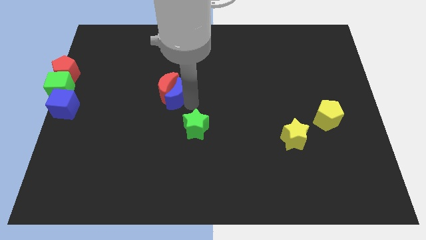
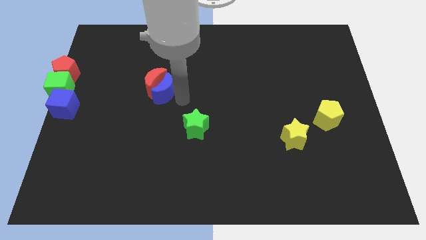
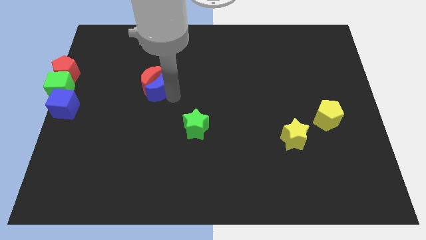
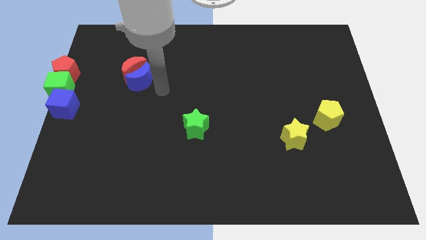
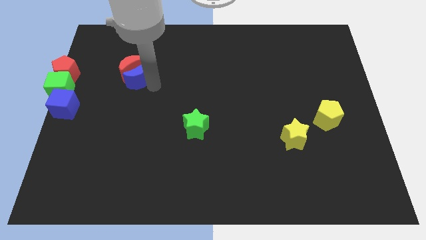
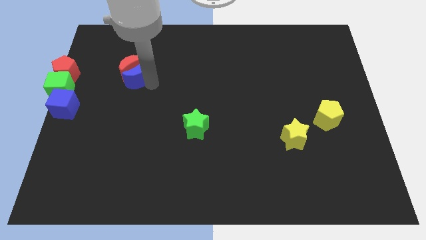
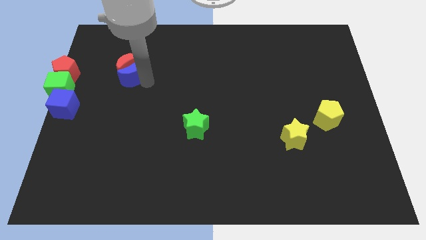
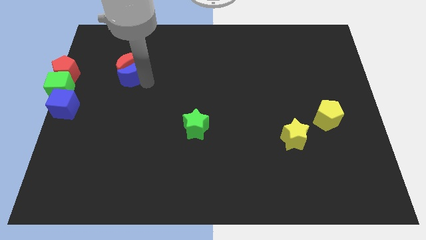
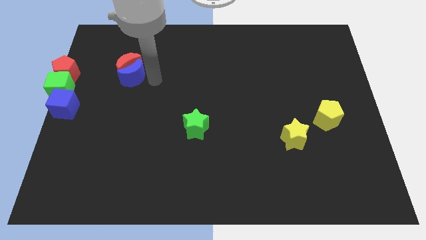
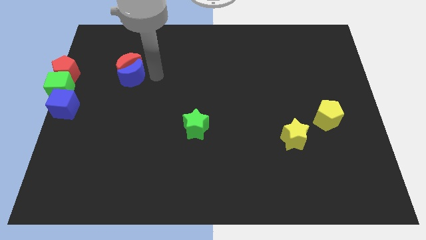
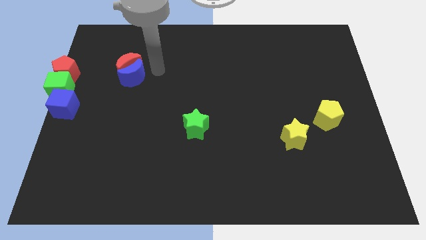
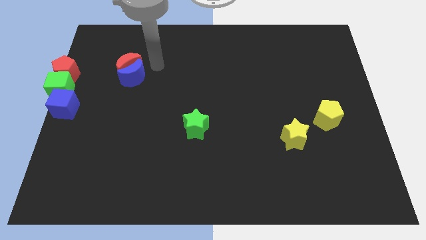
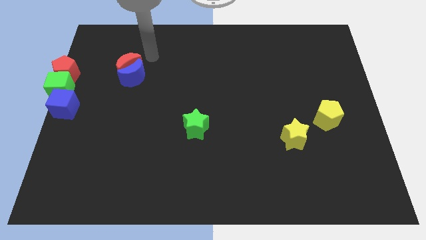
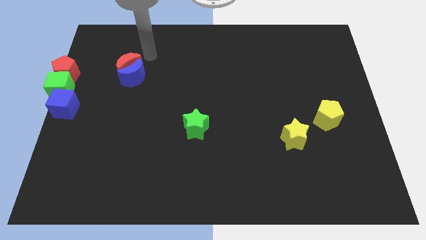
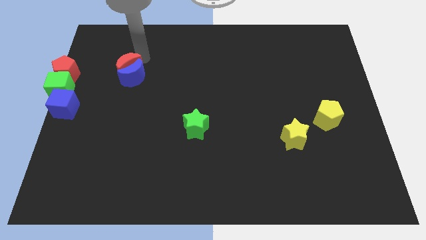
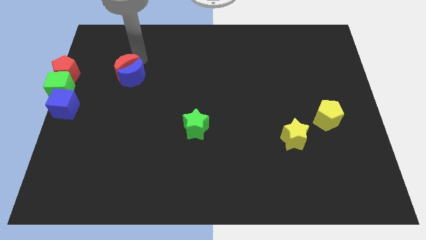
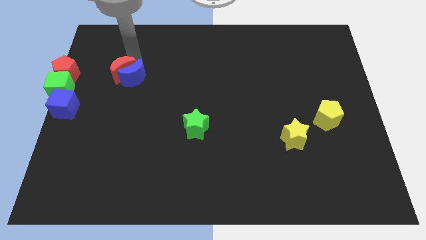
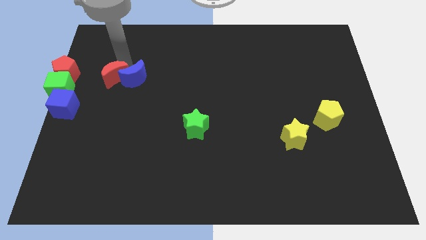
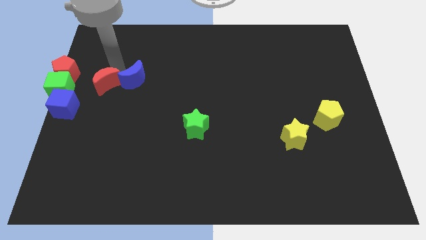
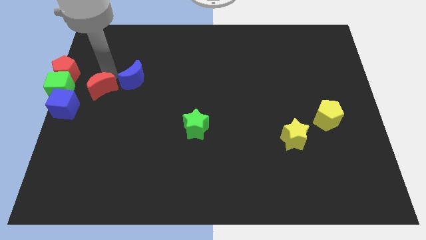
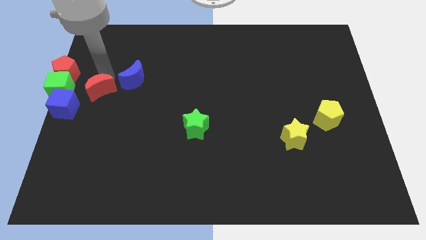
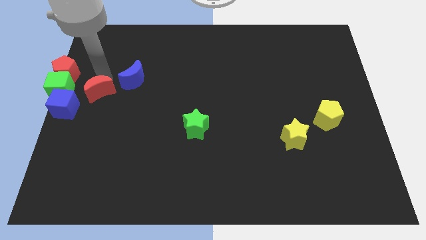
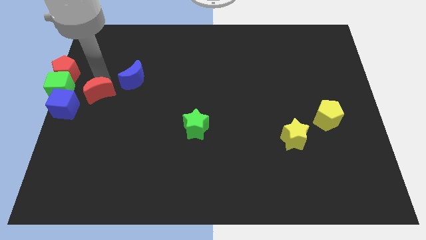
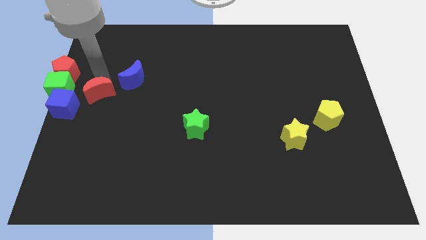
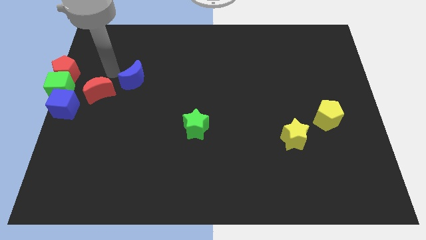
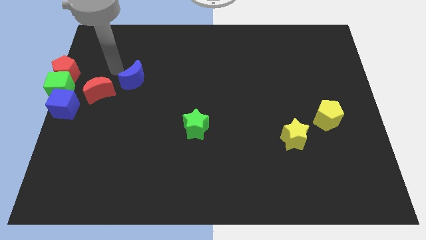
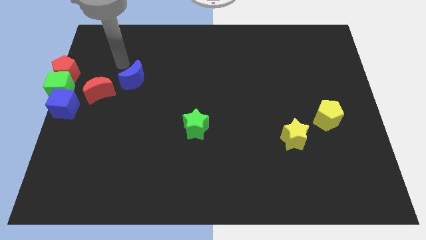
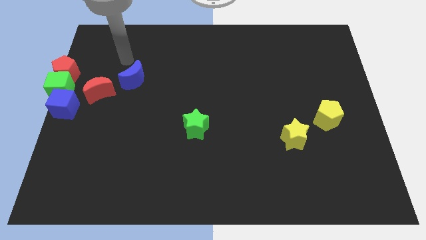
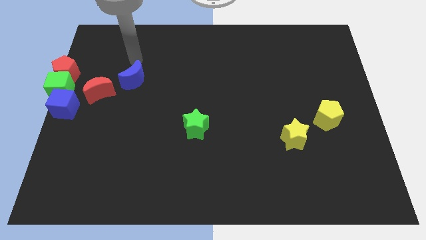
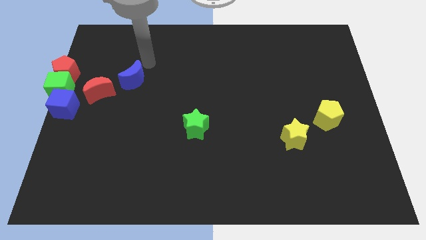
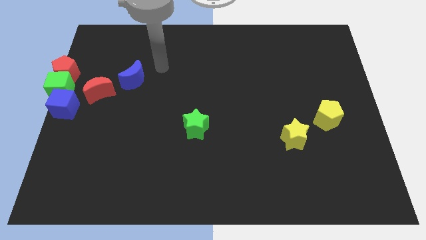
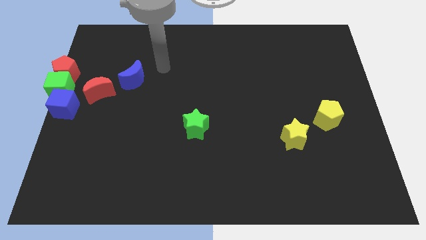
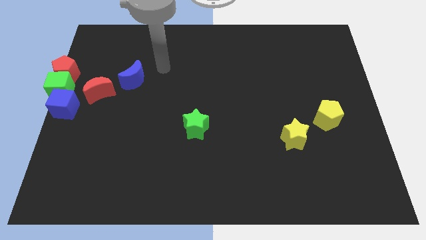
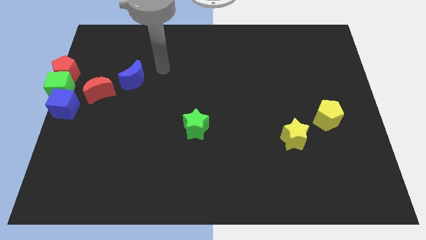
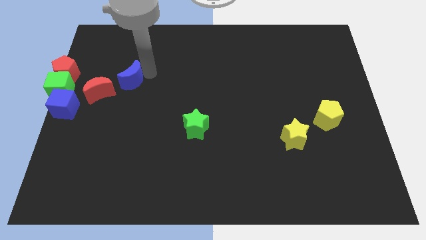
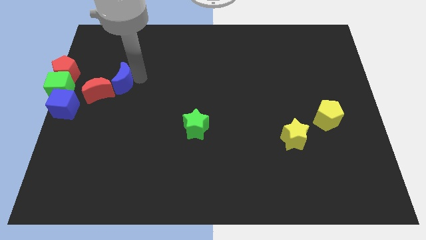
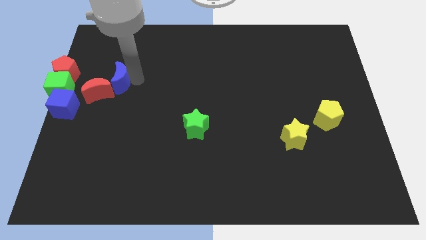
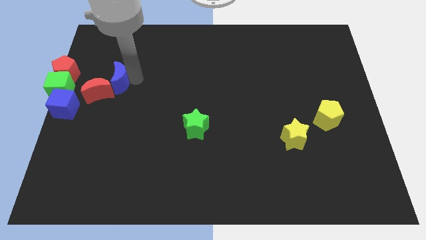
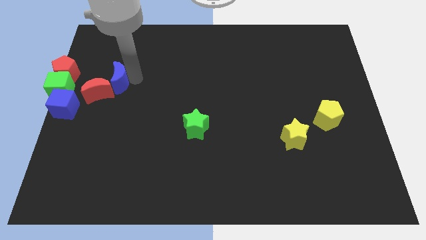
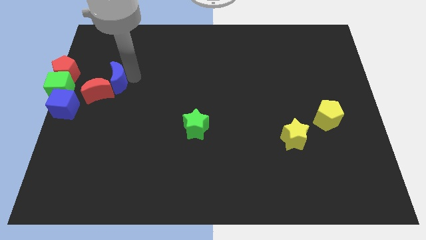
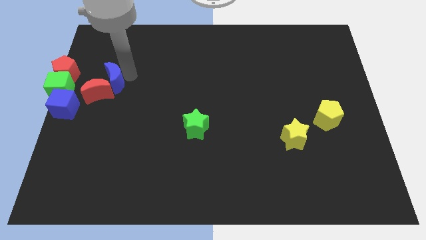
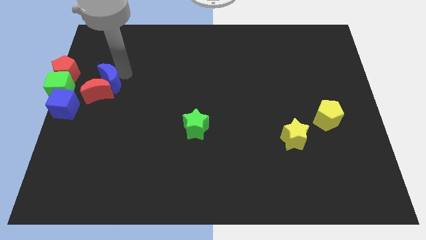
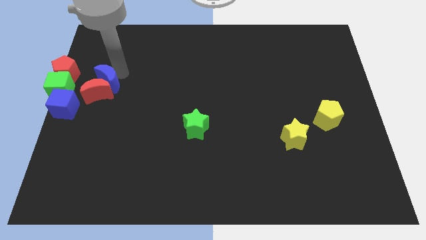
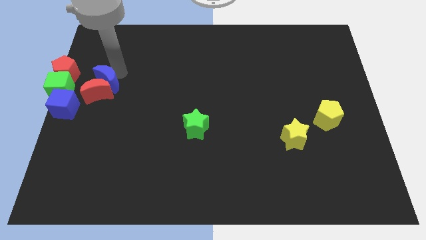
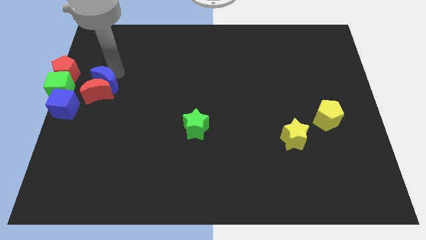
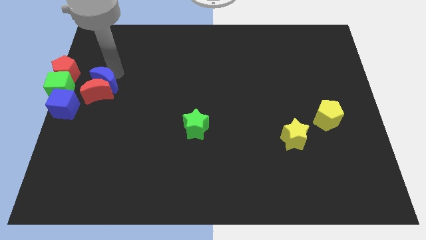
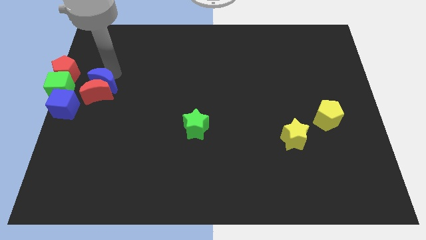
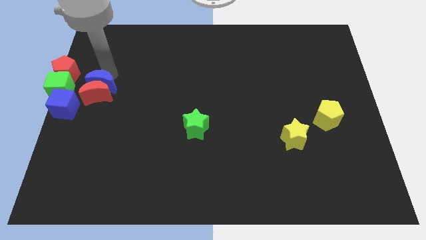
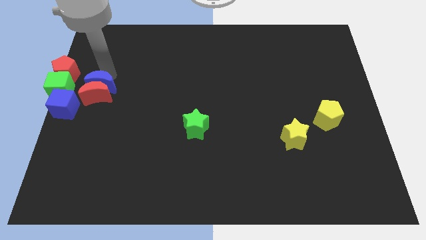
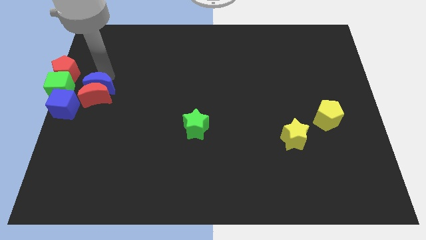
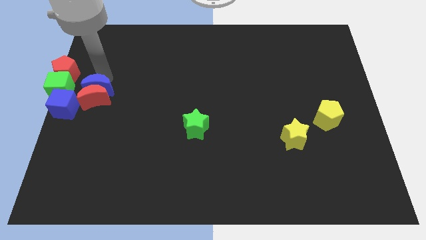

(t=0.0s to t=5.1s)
place the blue crescent above the red crescent

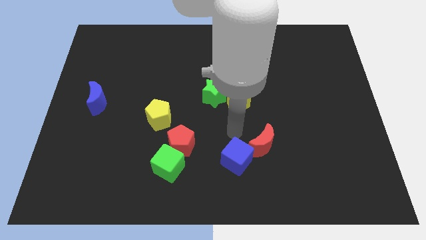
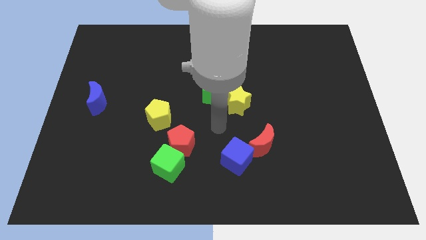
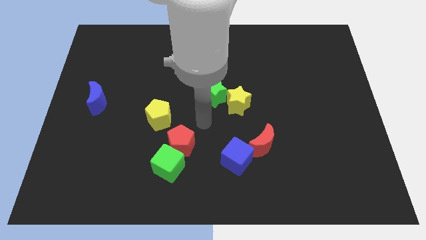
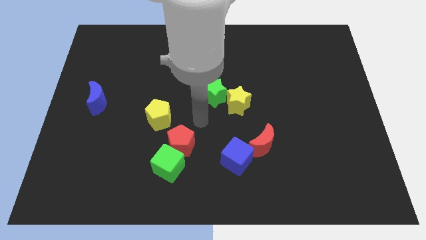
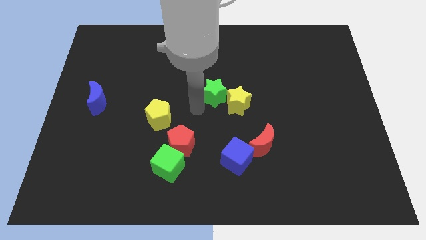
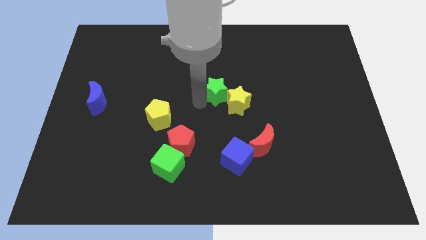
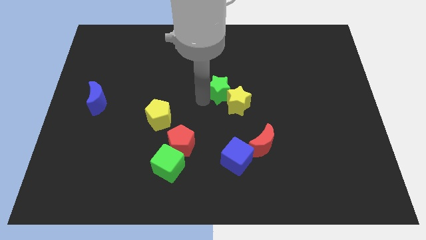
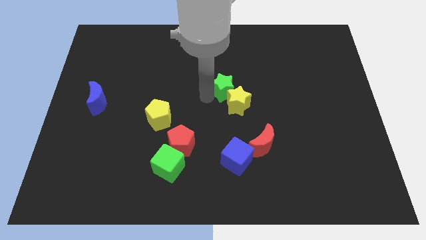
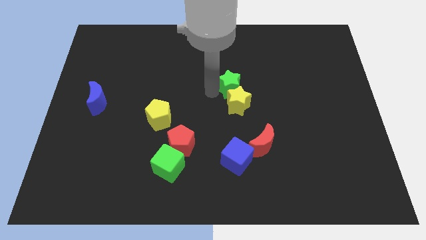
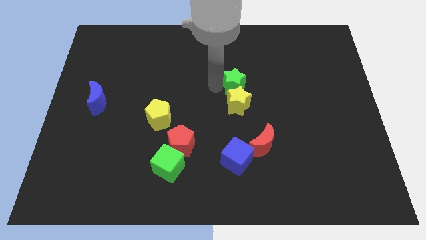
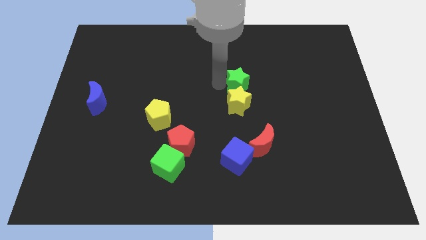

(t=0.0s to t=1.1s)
push the green star to the top of the yellow star

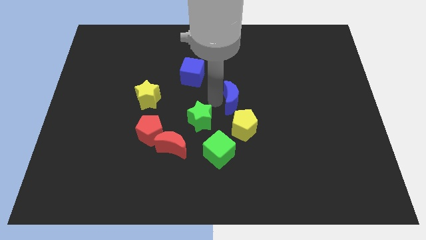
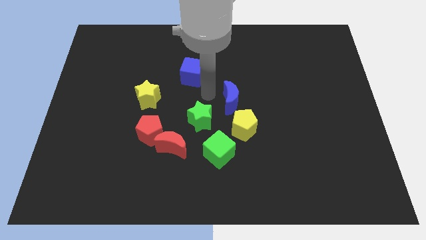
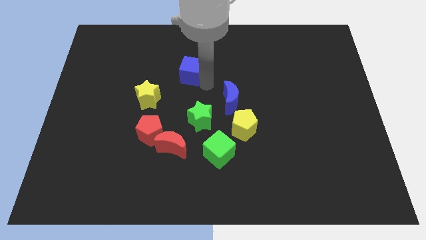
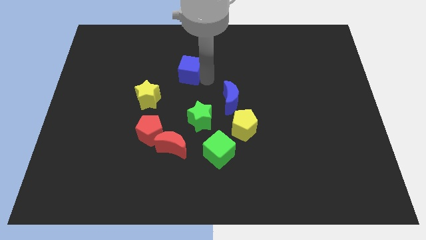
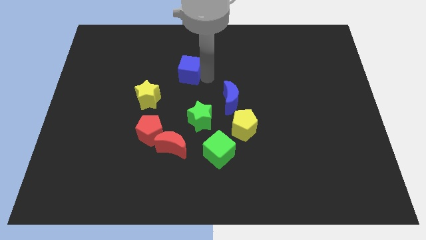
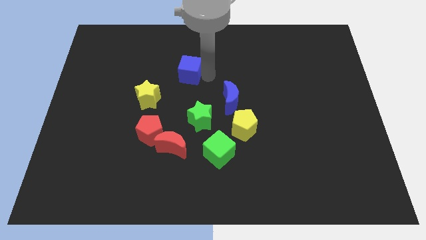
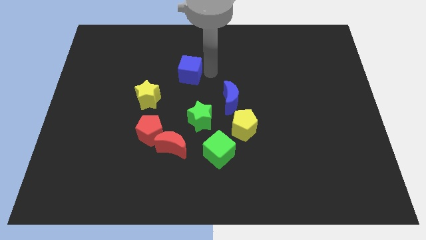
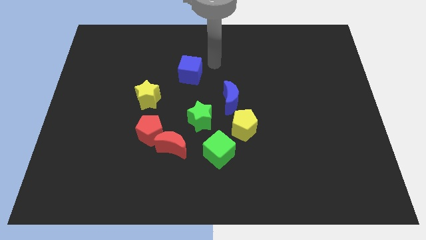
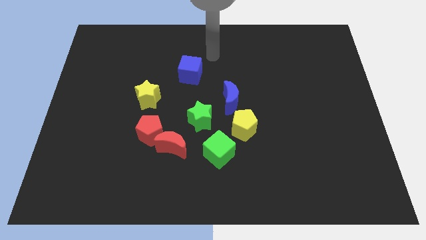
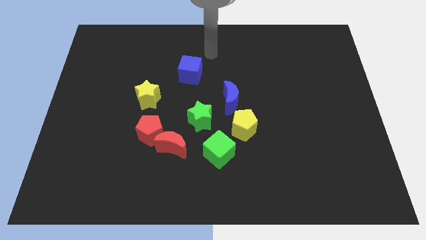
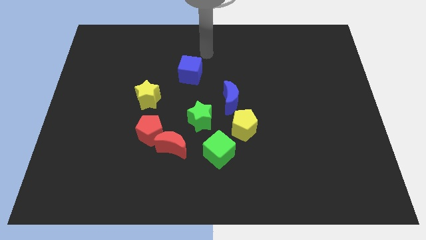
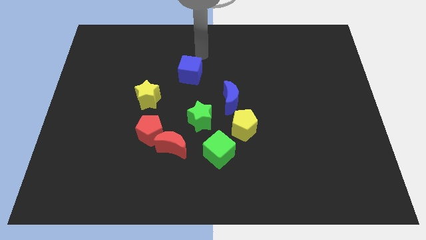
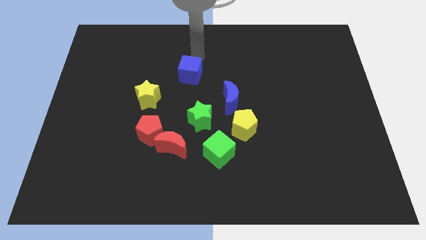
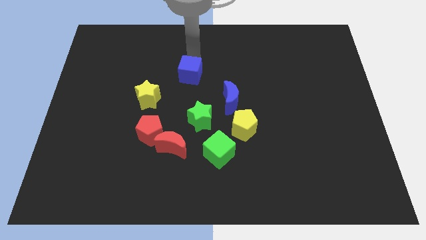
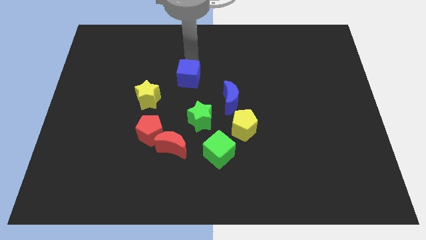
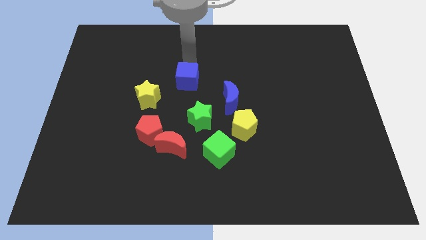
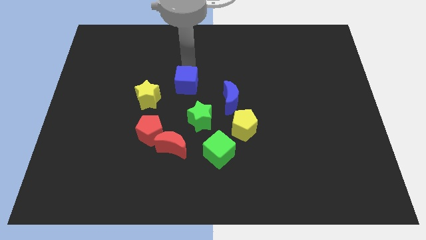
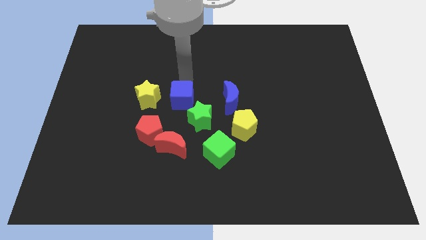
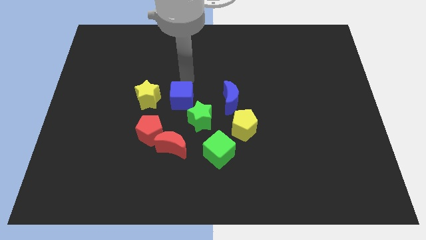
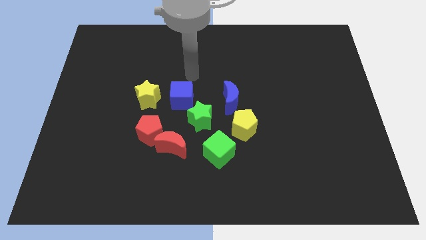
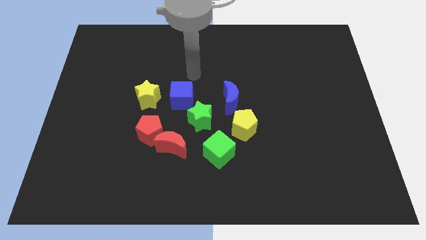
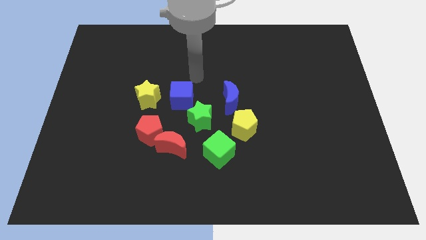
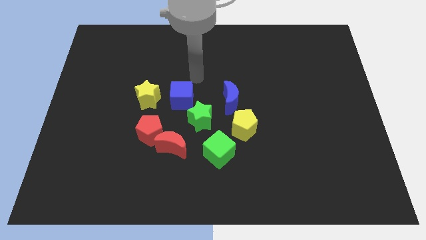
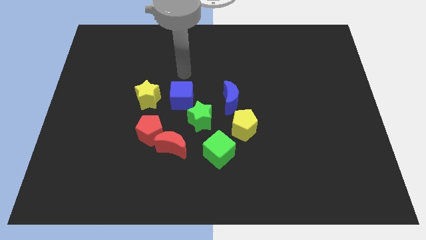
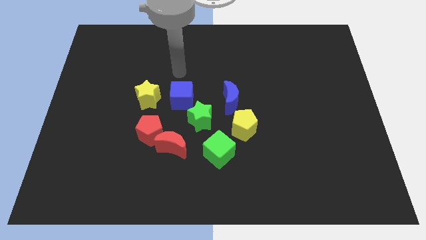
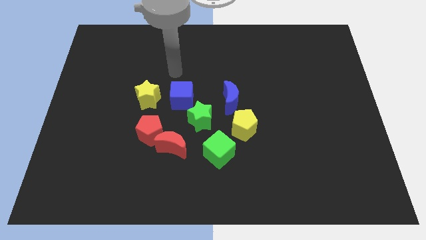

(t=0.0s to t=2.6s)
move the blue cube diagonally top left to green star

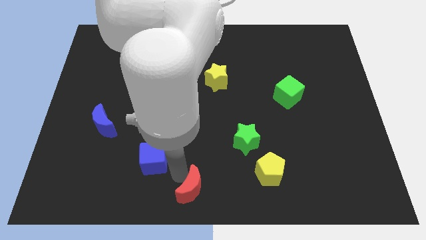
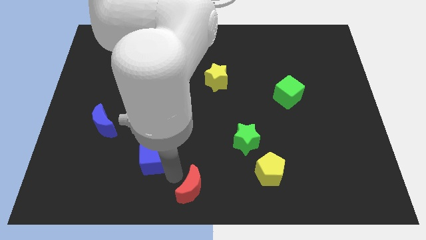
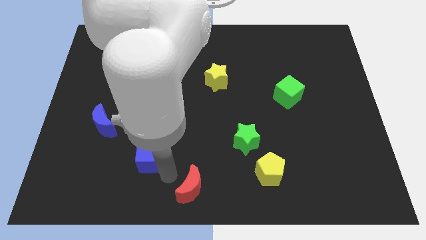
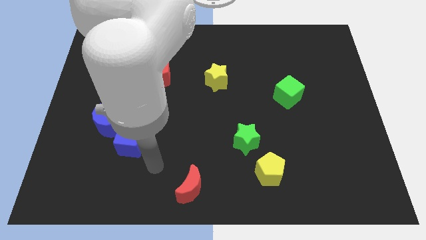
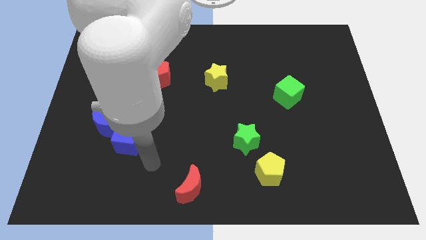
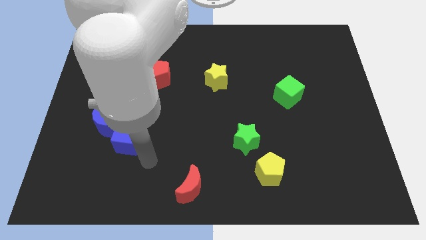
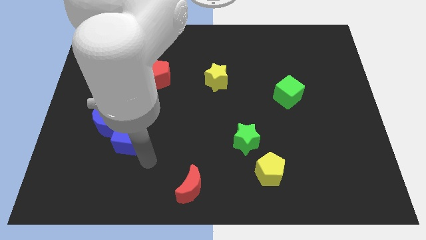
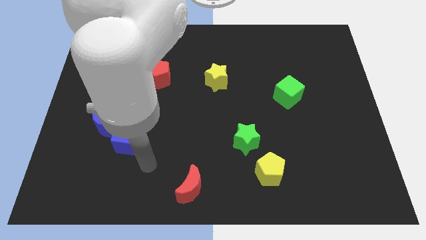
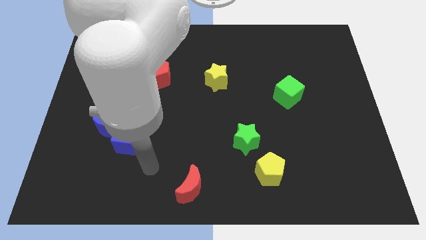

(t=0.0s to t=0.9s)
push the blue cube towards the blue moon
